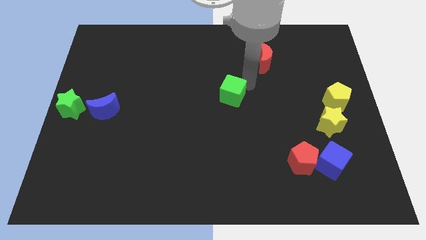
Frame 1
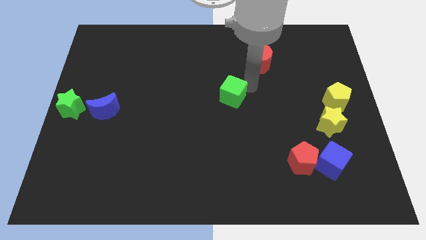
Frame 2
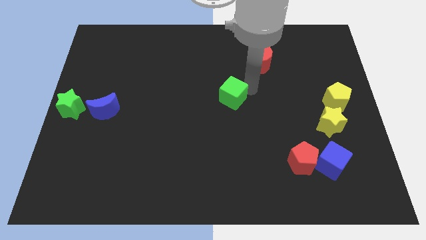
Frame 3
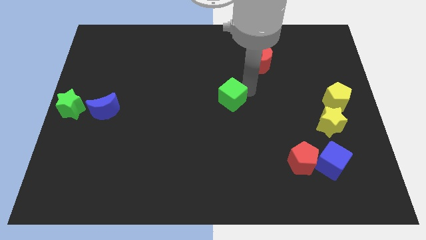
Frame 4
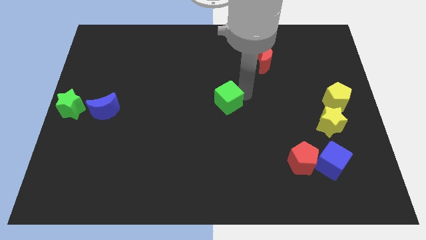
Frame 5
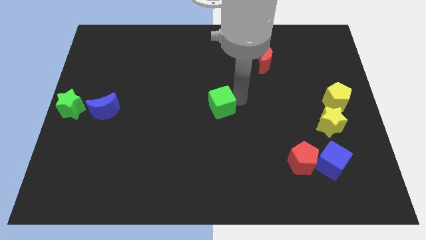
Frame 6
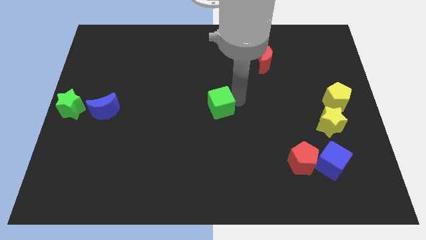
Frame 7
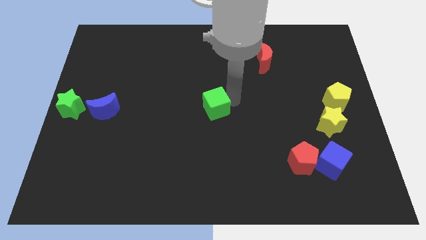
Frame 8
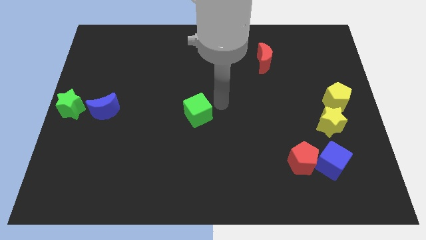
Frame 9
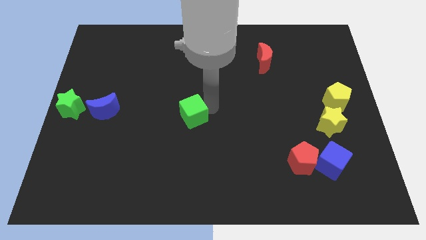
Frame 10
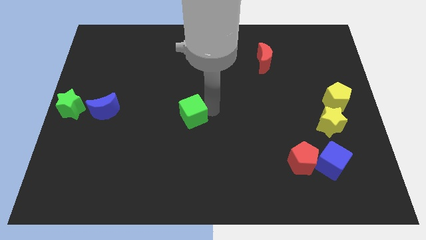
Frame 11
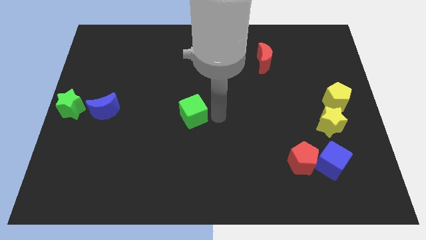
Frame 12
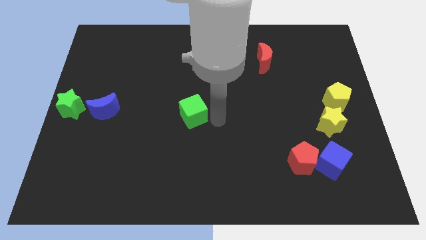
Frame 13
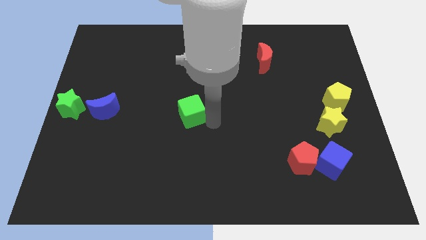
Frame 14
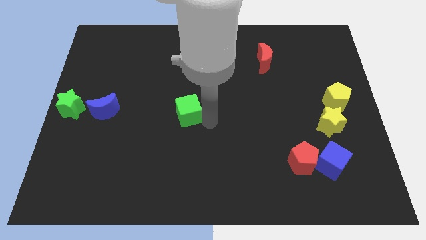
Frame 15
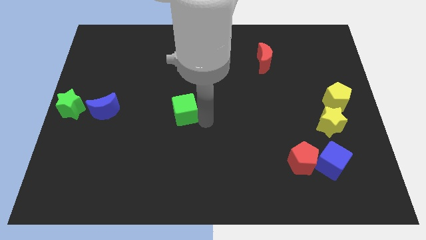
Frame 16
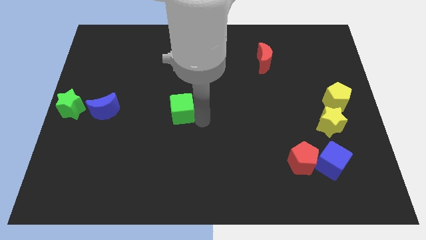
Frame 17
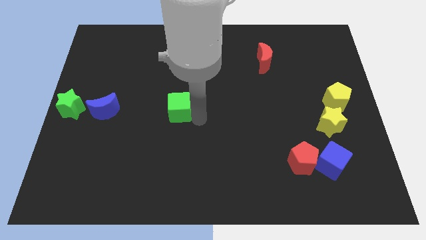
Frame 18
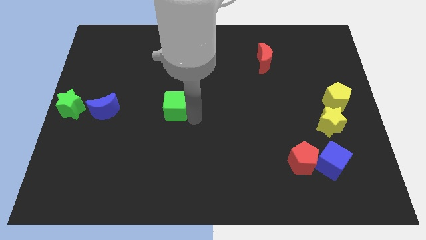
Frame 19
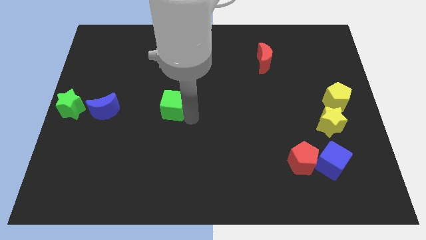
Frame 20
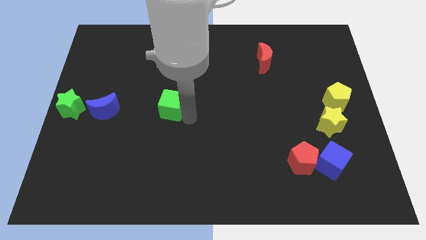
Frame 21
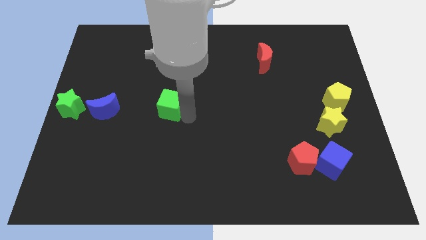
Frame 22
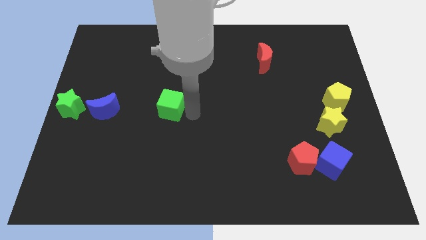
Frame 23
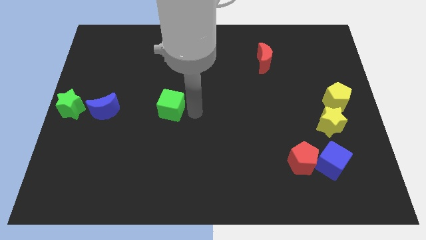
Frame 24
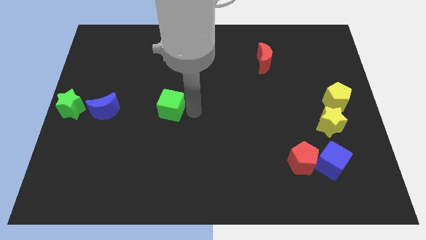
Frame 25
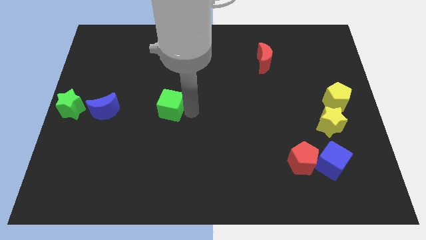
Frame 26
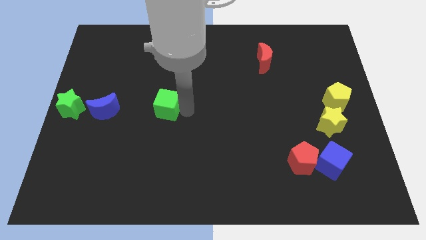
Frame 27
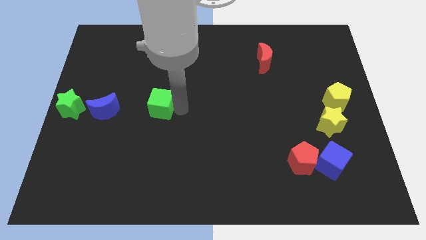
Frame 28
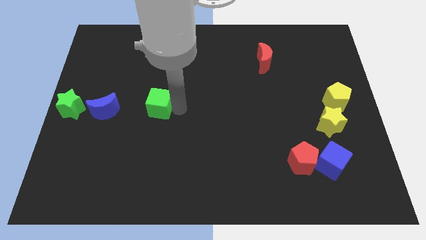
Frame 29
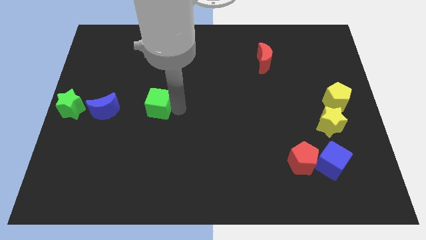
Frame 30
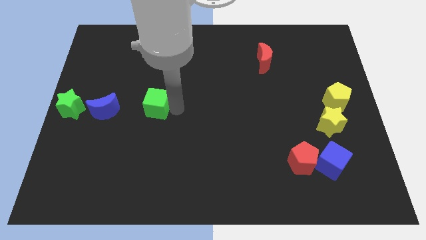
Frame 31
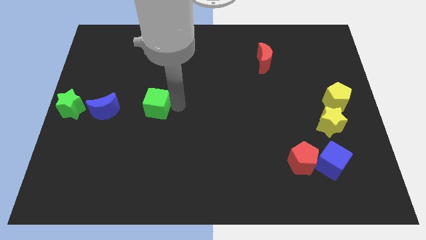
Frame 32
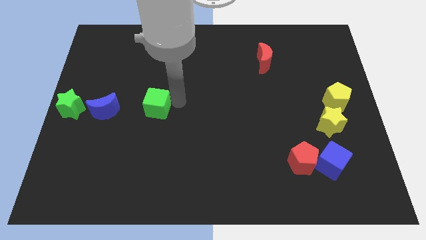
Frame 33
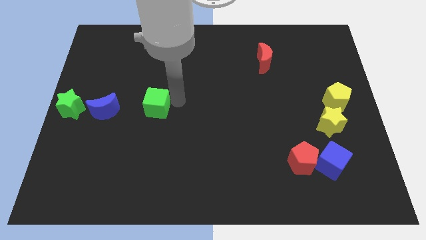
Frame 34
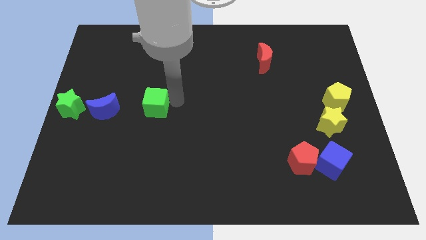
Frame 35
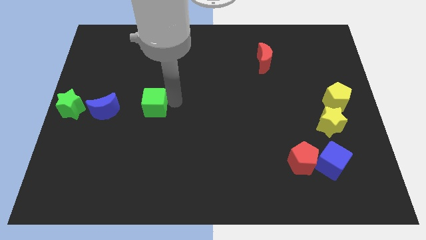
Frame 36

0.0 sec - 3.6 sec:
place the green cube to the right of the blue moon

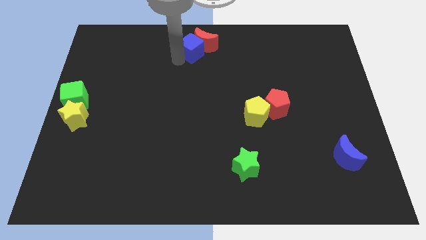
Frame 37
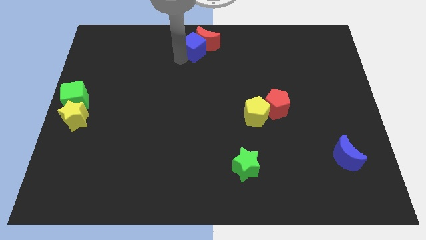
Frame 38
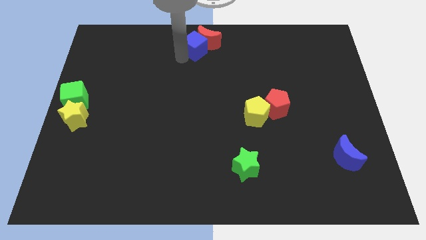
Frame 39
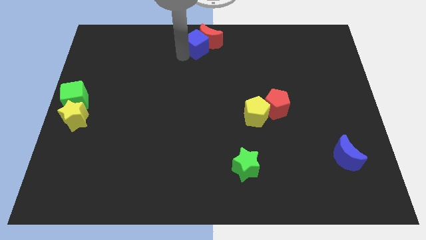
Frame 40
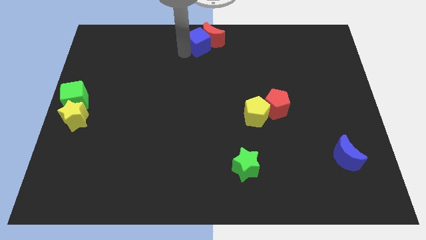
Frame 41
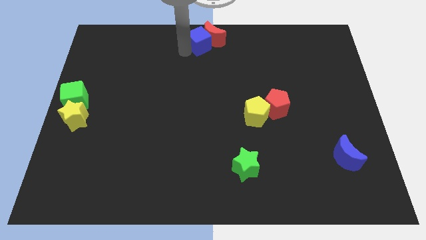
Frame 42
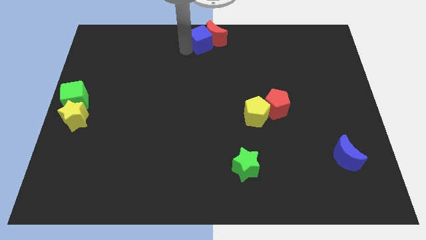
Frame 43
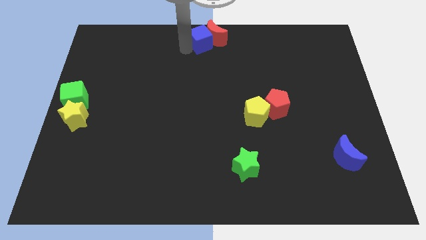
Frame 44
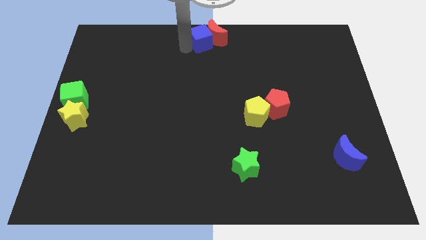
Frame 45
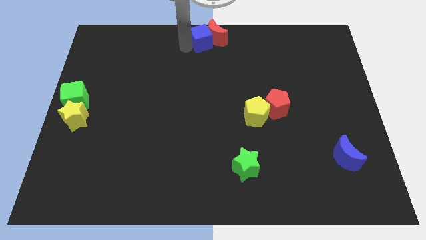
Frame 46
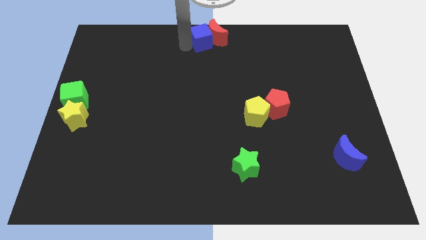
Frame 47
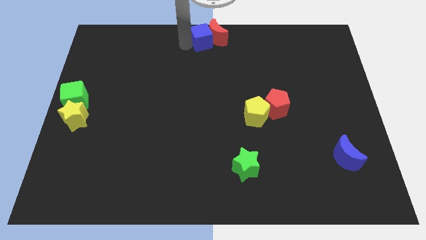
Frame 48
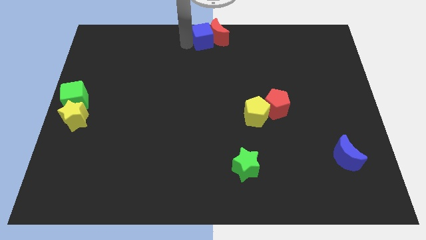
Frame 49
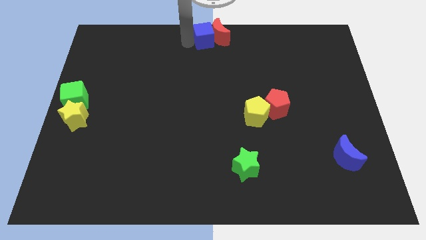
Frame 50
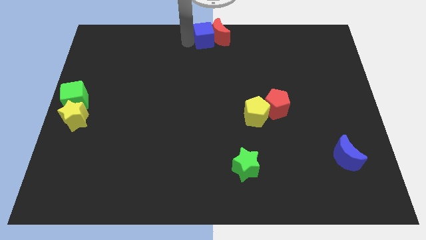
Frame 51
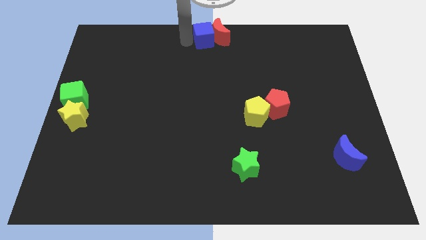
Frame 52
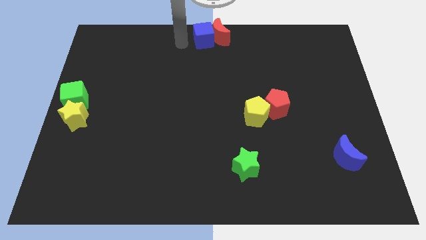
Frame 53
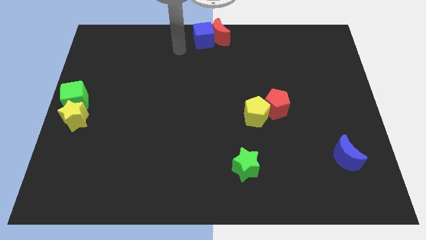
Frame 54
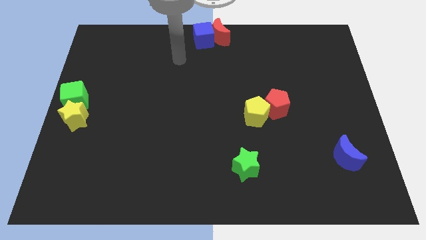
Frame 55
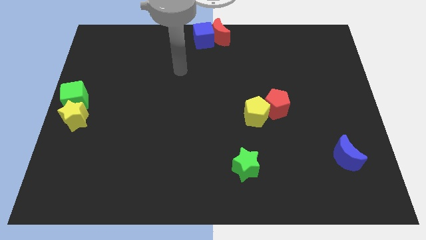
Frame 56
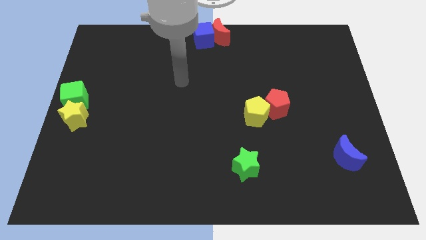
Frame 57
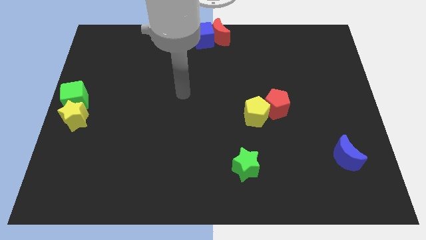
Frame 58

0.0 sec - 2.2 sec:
place the blue cube and red crescent to the top center

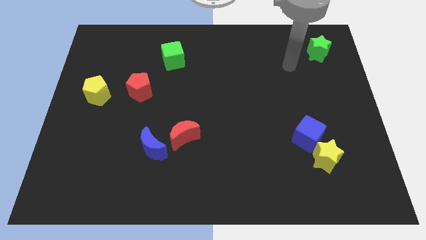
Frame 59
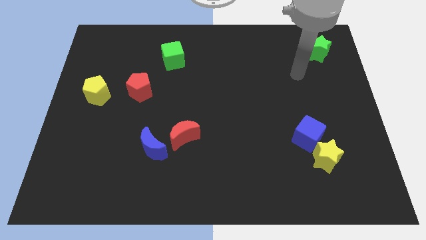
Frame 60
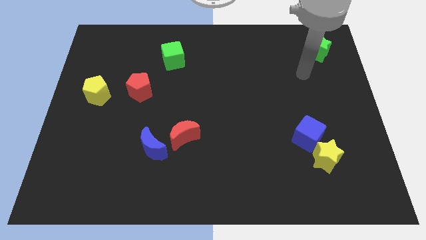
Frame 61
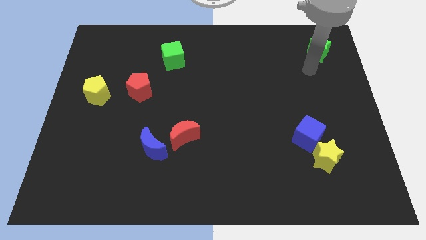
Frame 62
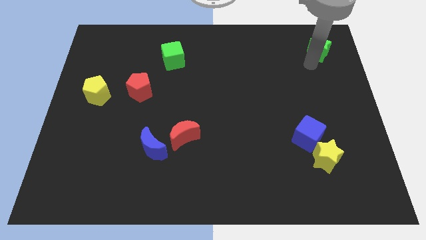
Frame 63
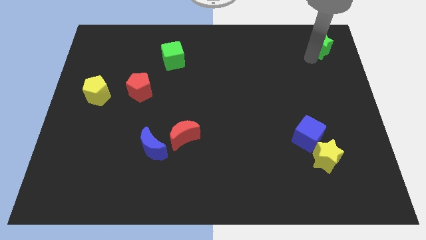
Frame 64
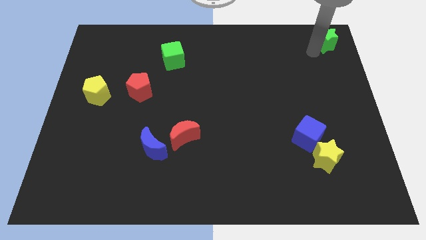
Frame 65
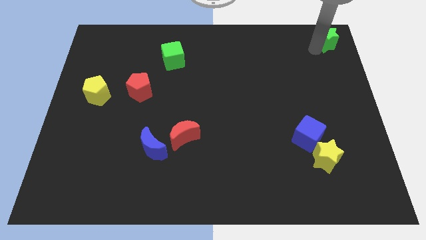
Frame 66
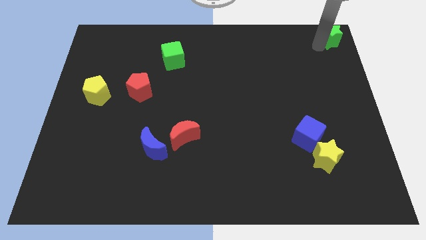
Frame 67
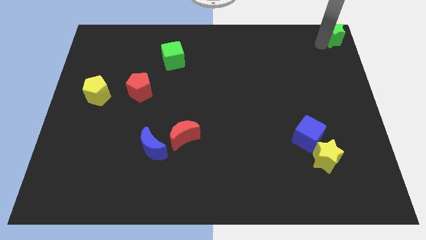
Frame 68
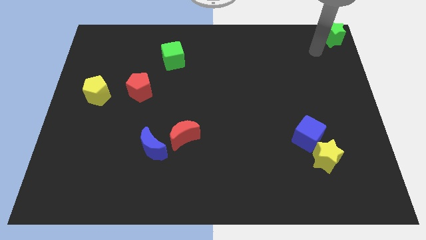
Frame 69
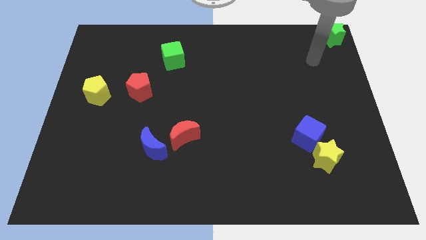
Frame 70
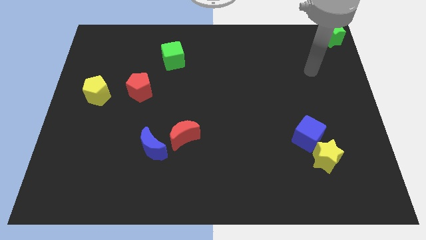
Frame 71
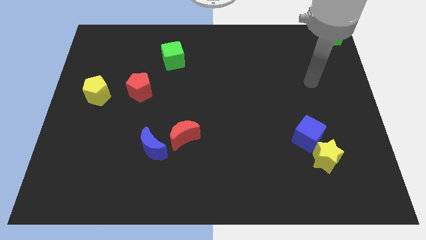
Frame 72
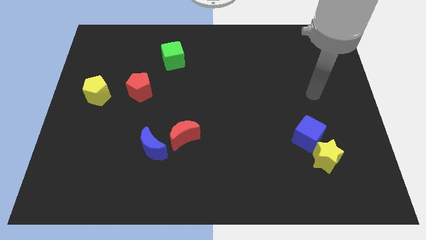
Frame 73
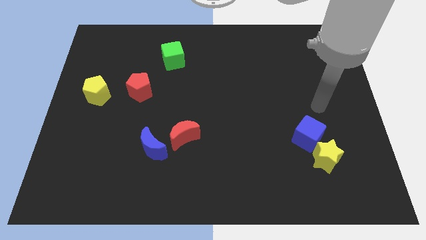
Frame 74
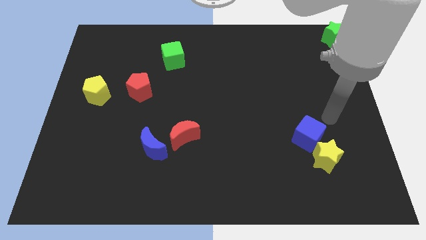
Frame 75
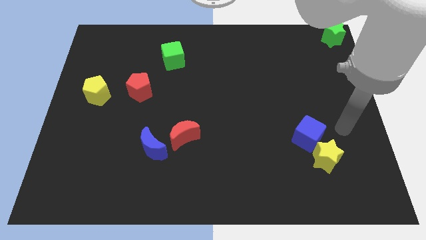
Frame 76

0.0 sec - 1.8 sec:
slide the green star to the top right corner of the board

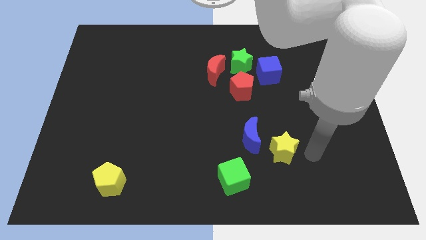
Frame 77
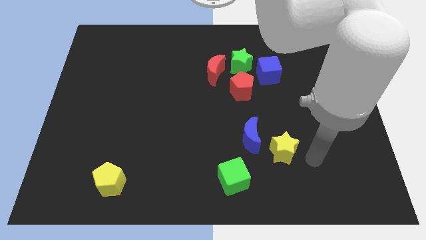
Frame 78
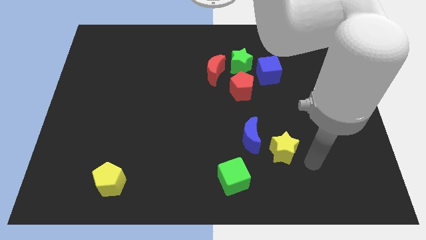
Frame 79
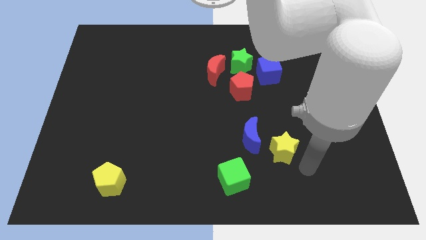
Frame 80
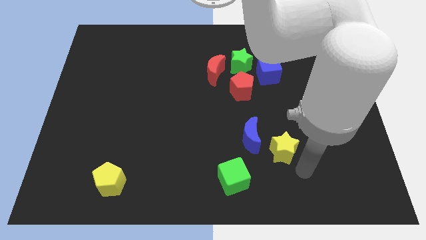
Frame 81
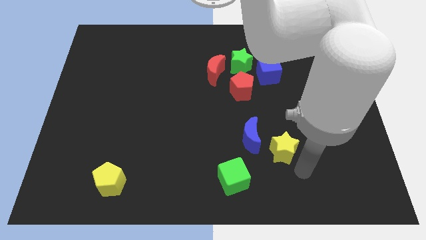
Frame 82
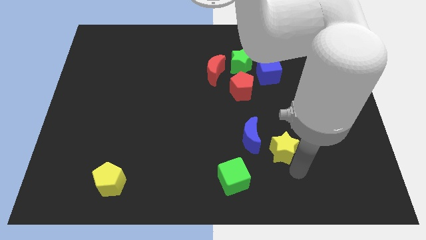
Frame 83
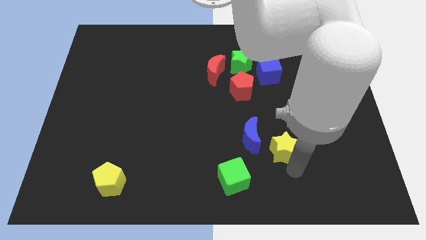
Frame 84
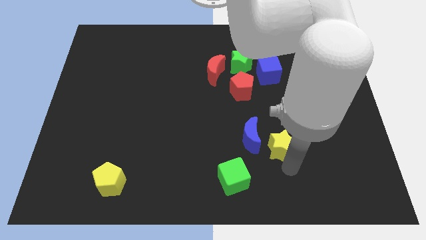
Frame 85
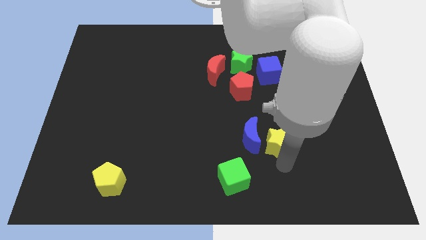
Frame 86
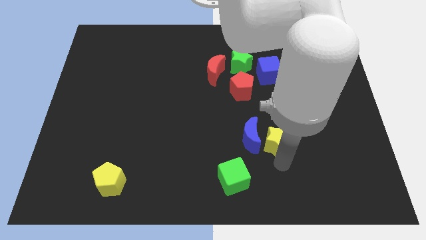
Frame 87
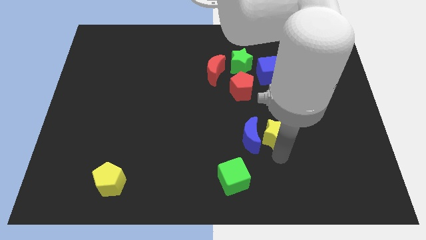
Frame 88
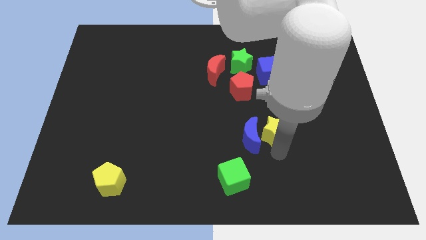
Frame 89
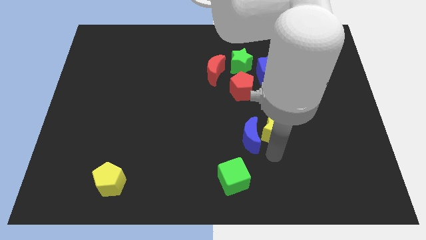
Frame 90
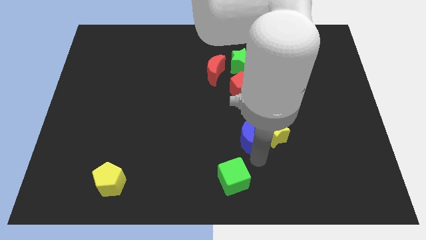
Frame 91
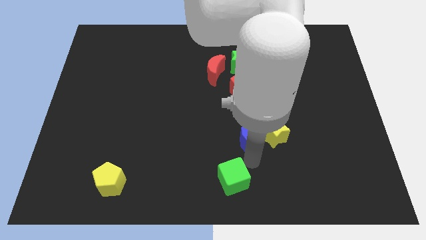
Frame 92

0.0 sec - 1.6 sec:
push the yellow star to the right side of the blue moon
